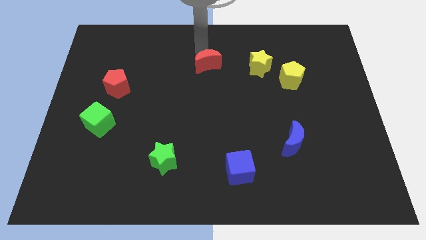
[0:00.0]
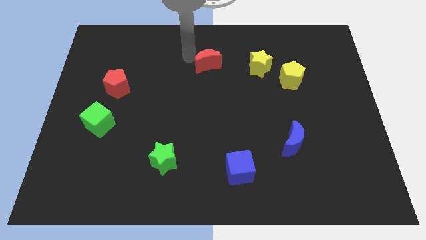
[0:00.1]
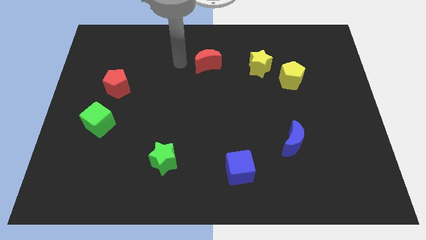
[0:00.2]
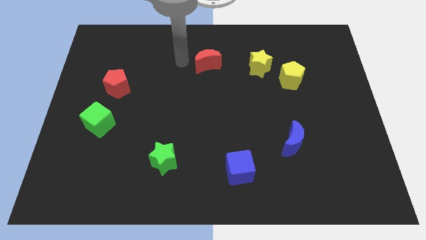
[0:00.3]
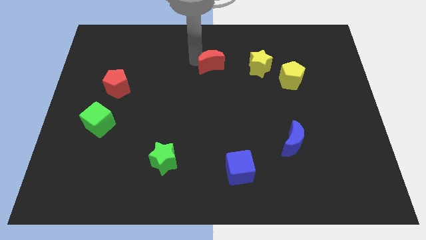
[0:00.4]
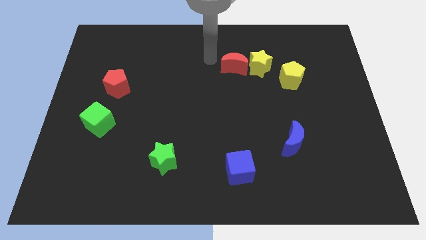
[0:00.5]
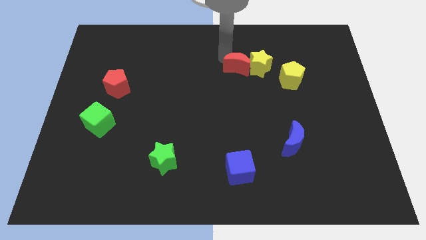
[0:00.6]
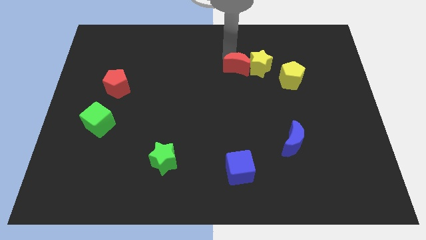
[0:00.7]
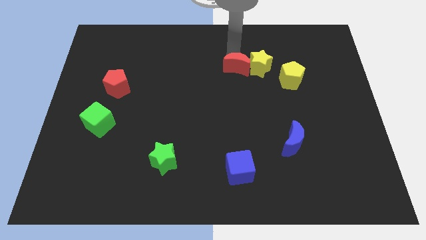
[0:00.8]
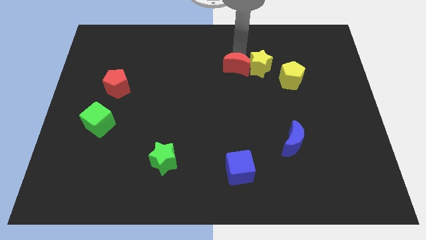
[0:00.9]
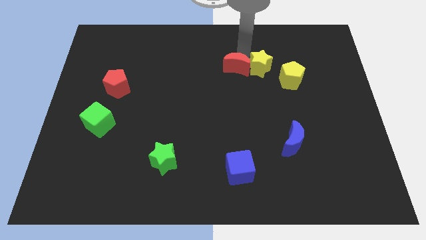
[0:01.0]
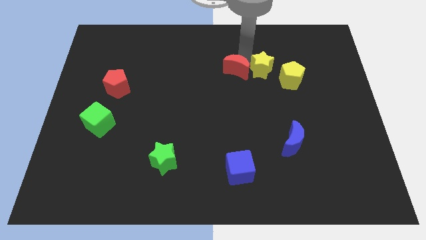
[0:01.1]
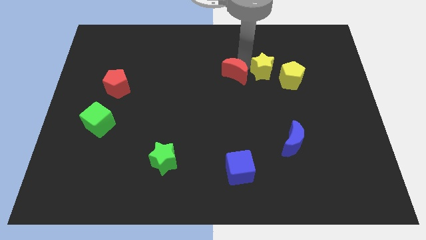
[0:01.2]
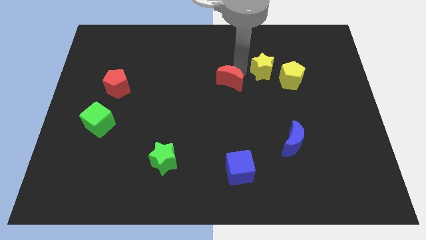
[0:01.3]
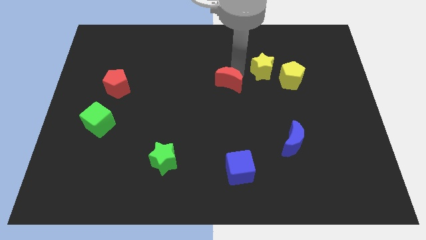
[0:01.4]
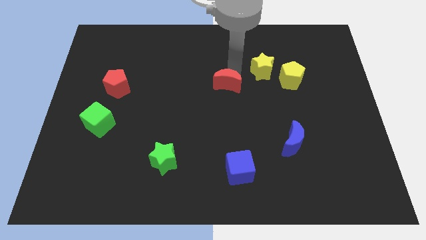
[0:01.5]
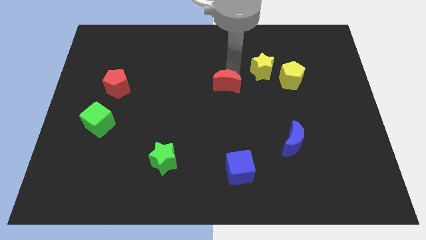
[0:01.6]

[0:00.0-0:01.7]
drag the red moon to the bottom left of the yellow star

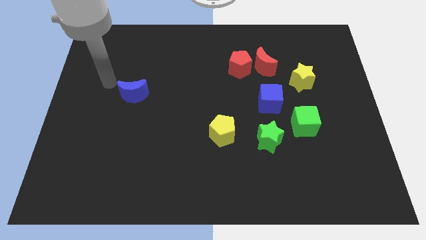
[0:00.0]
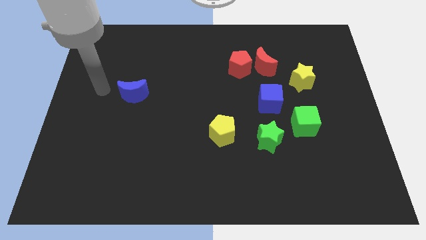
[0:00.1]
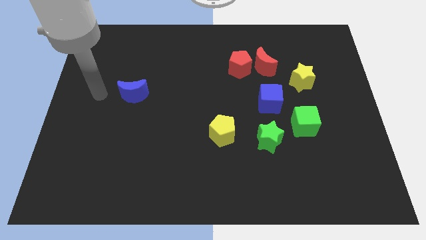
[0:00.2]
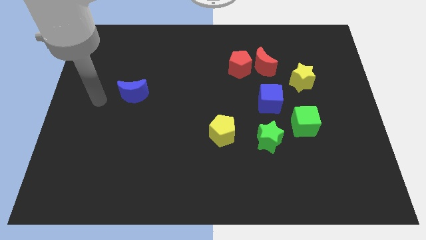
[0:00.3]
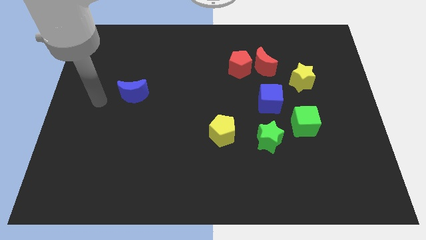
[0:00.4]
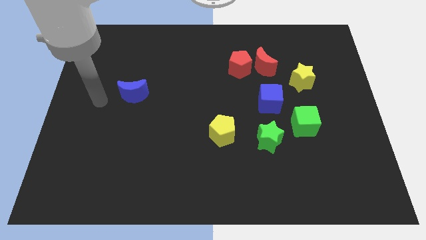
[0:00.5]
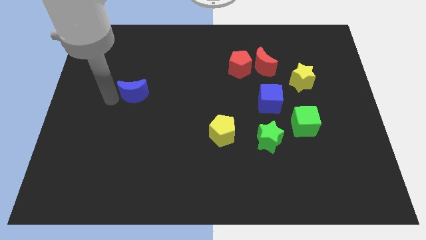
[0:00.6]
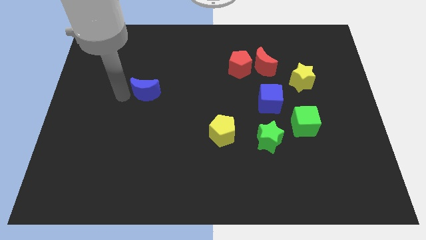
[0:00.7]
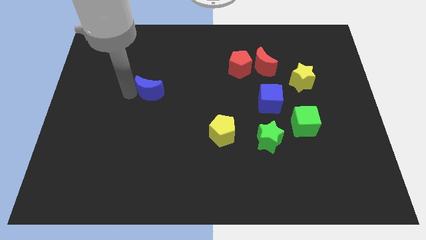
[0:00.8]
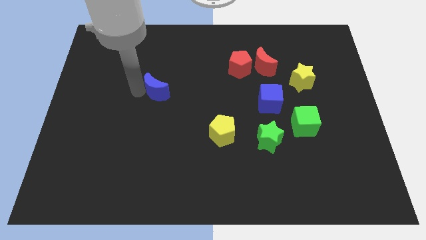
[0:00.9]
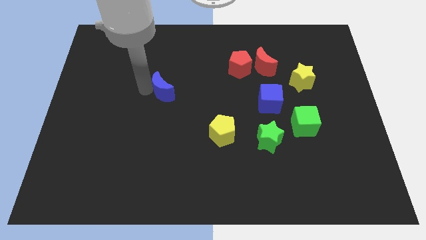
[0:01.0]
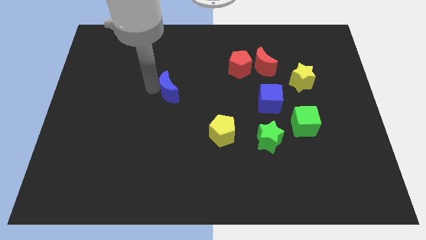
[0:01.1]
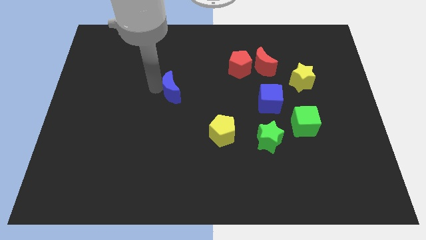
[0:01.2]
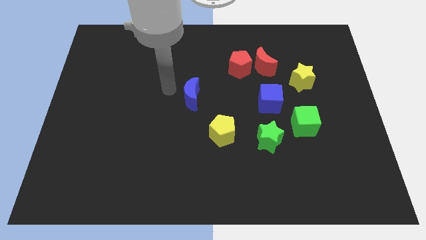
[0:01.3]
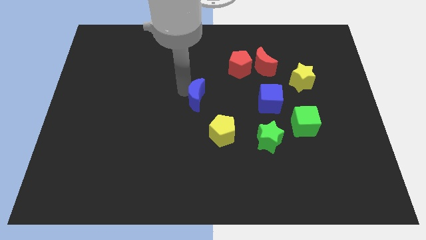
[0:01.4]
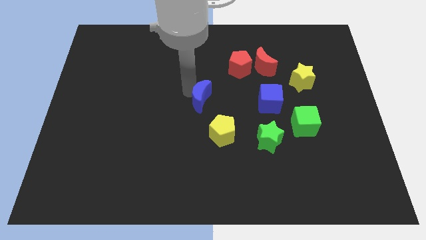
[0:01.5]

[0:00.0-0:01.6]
move blue moon slightly right

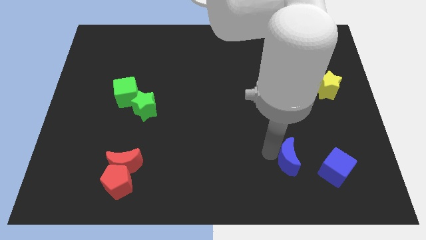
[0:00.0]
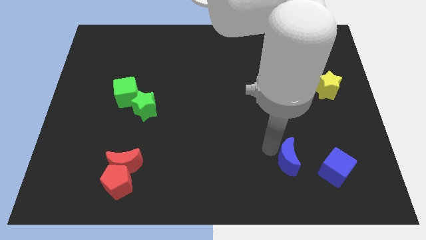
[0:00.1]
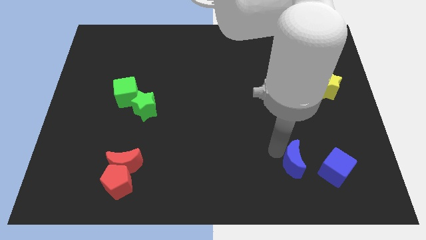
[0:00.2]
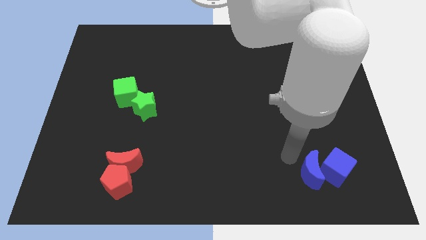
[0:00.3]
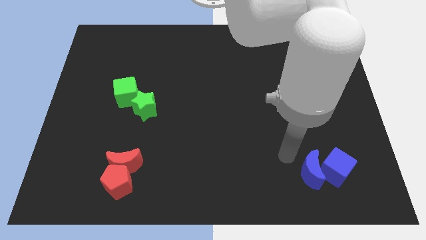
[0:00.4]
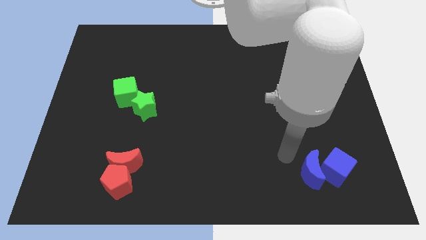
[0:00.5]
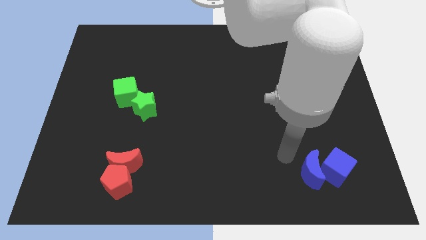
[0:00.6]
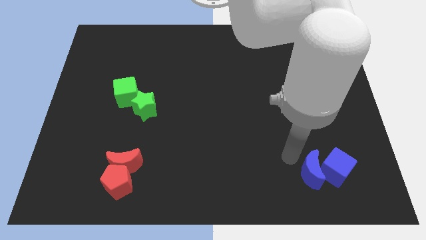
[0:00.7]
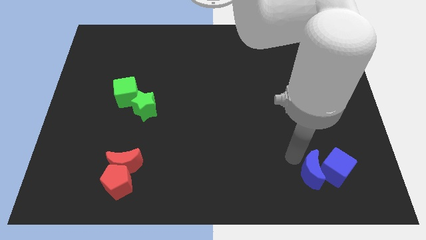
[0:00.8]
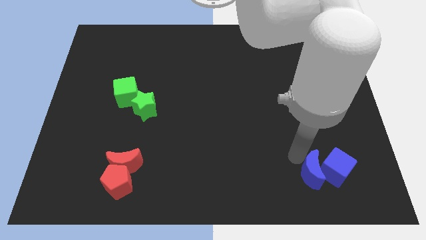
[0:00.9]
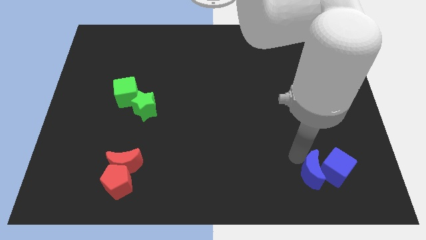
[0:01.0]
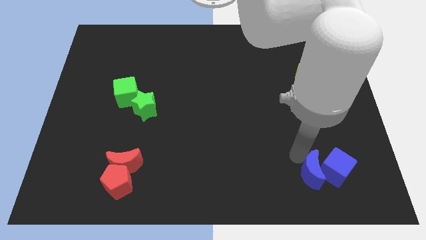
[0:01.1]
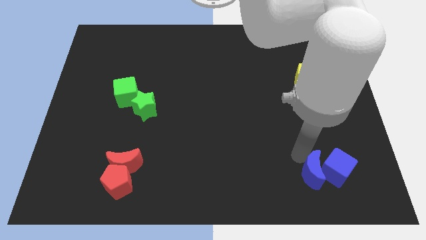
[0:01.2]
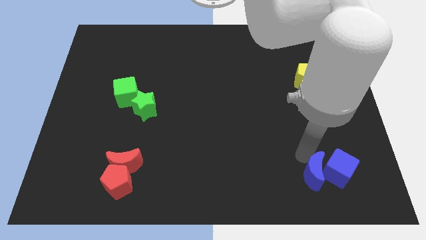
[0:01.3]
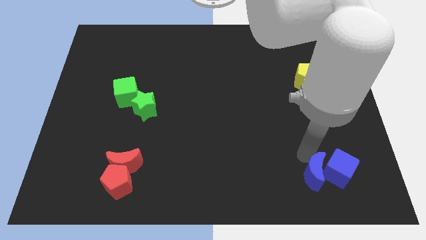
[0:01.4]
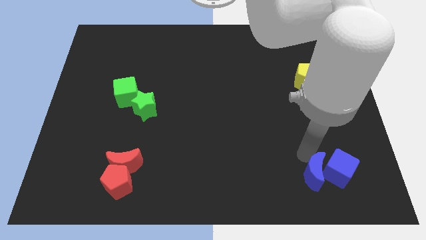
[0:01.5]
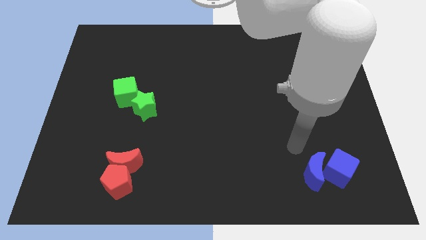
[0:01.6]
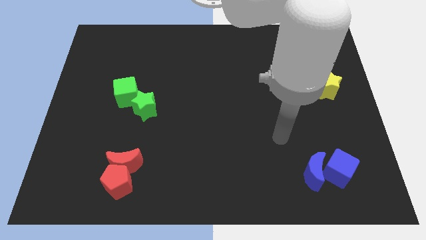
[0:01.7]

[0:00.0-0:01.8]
move the blue crescent to the left side of the blue cube

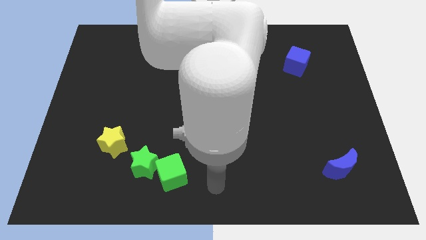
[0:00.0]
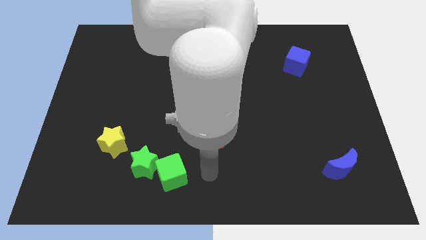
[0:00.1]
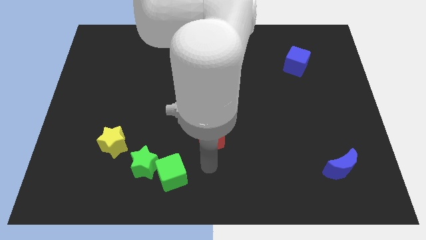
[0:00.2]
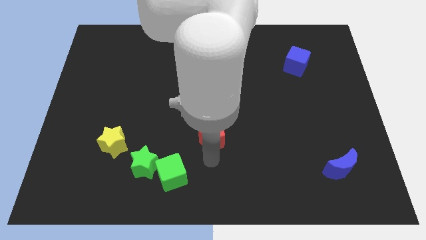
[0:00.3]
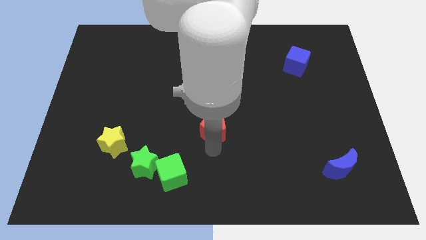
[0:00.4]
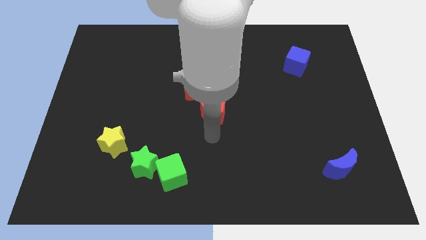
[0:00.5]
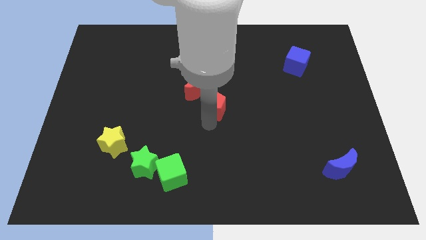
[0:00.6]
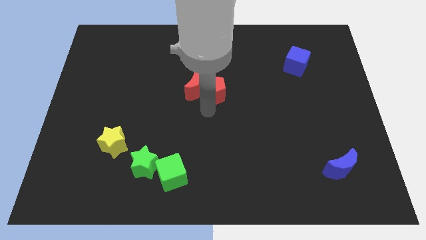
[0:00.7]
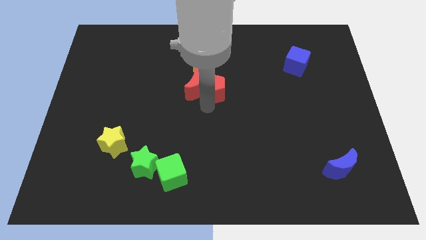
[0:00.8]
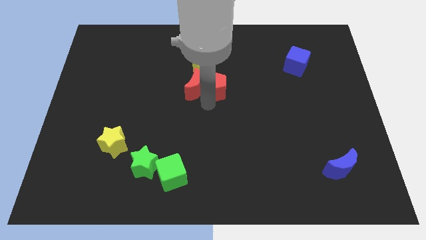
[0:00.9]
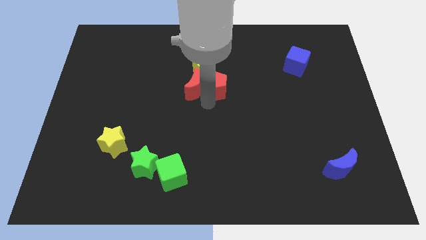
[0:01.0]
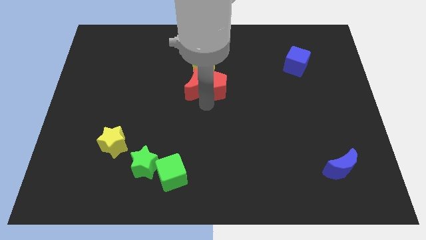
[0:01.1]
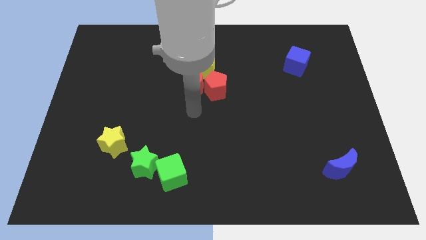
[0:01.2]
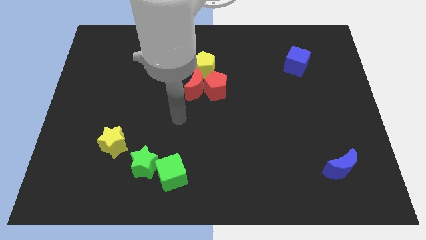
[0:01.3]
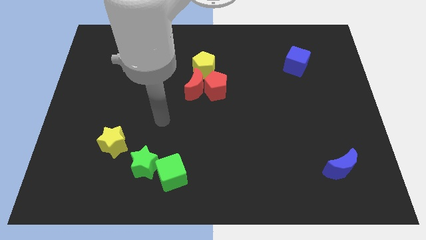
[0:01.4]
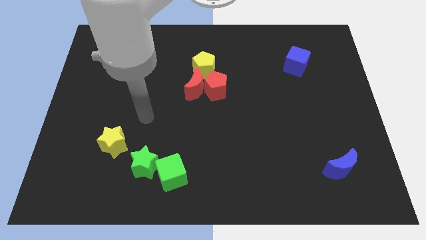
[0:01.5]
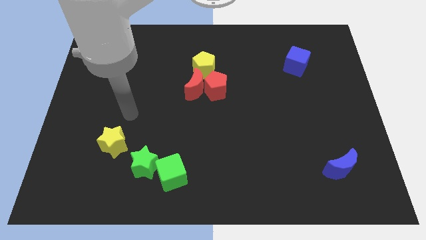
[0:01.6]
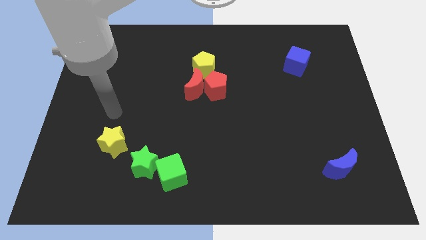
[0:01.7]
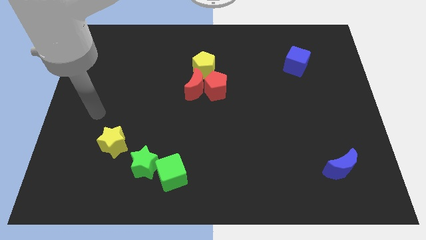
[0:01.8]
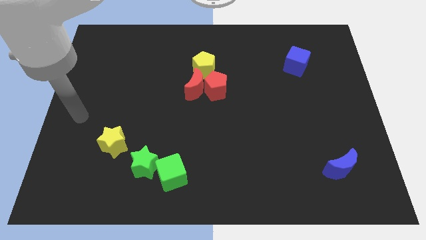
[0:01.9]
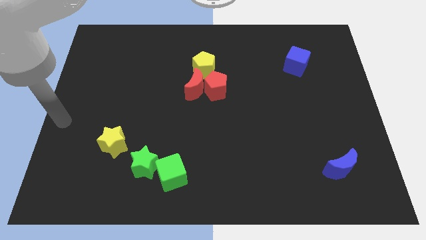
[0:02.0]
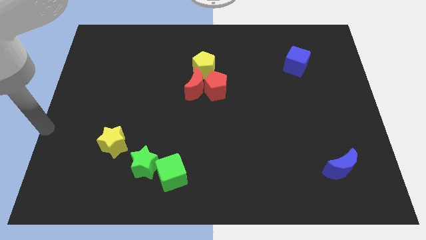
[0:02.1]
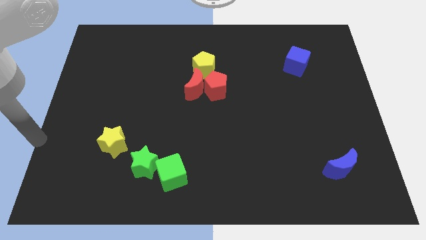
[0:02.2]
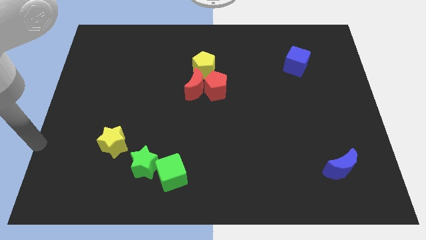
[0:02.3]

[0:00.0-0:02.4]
move red pentagon towards the red crescent

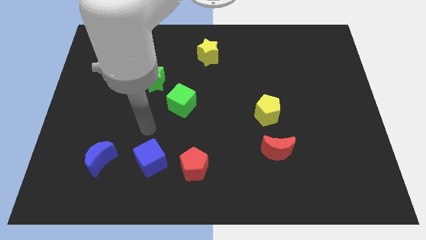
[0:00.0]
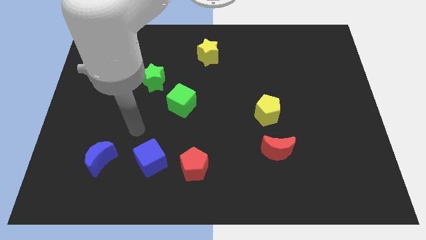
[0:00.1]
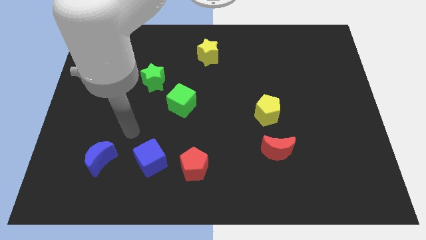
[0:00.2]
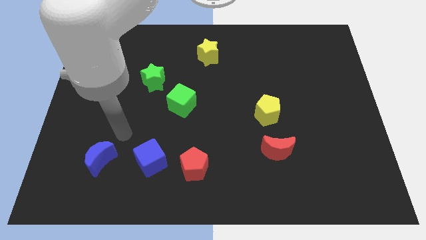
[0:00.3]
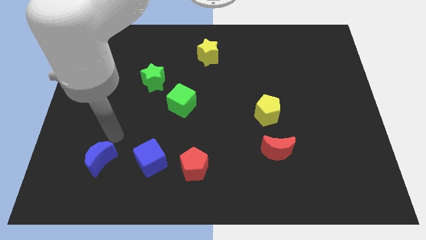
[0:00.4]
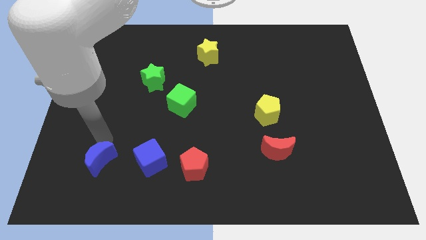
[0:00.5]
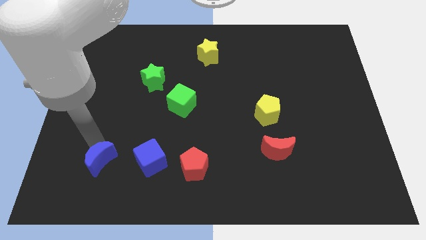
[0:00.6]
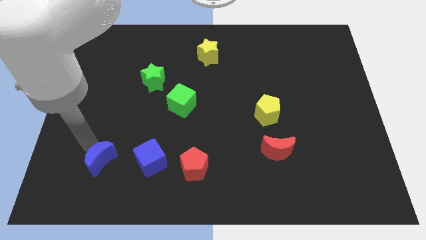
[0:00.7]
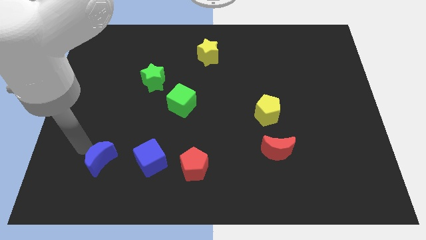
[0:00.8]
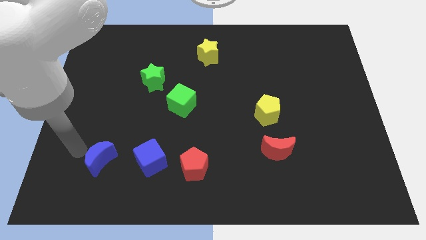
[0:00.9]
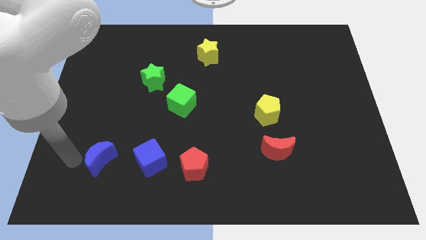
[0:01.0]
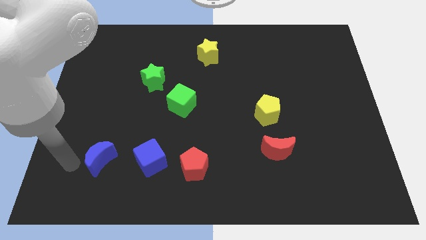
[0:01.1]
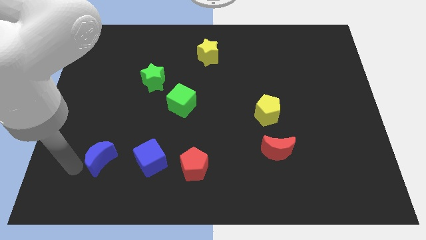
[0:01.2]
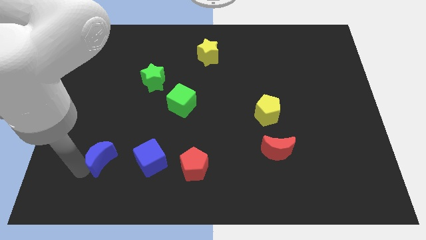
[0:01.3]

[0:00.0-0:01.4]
move your arm away from the top side of the blue cube
